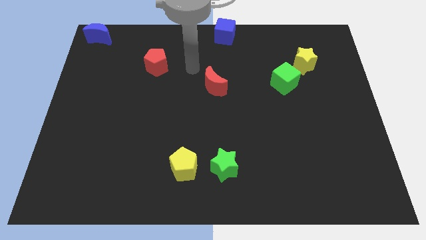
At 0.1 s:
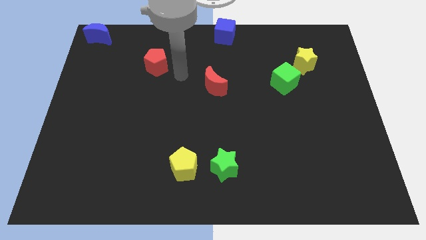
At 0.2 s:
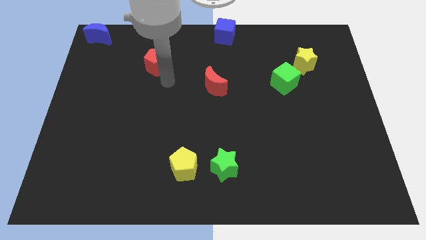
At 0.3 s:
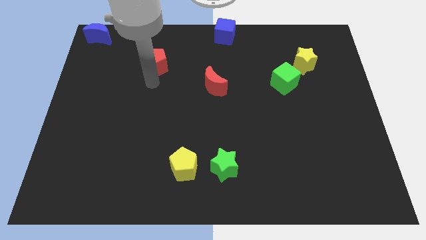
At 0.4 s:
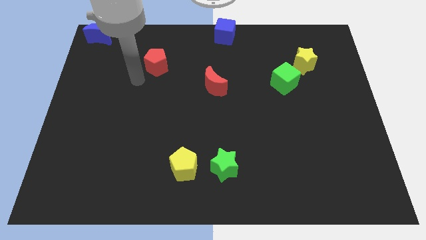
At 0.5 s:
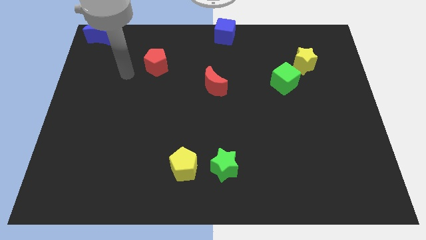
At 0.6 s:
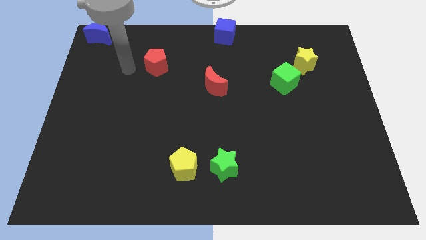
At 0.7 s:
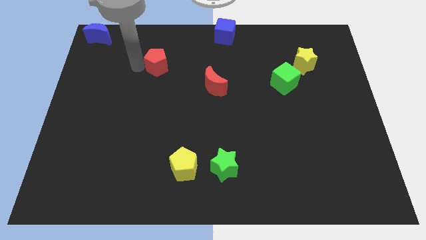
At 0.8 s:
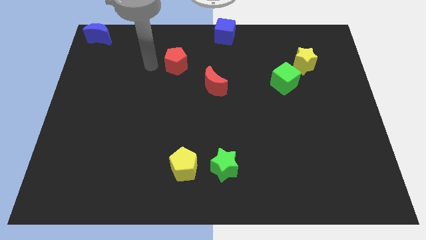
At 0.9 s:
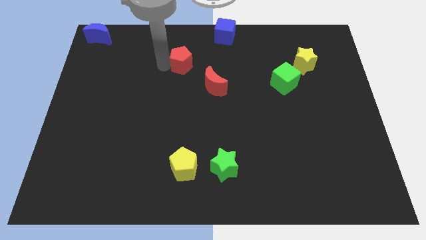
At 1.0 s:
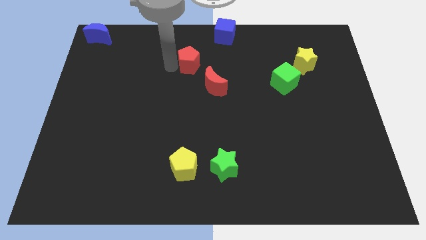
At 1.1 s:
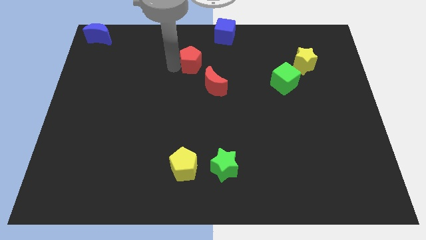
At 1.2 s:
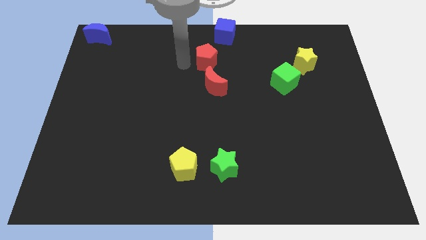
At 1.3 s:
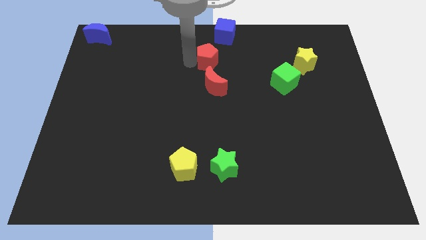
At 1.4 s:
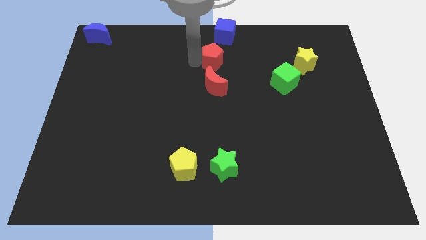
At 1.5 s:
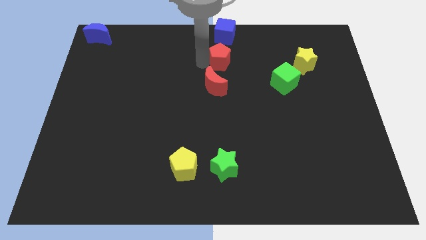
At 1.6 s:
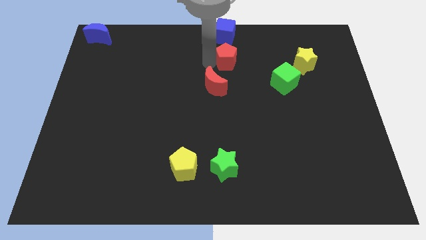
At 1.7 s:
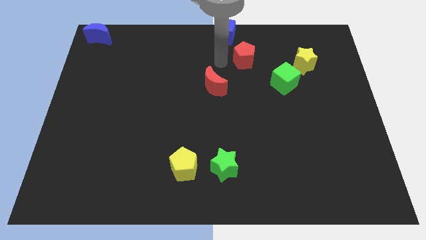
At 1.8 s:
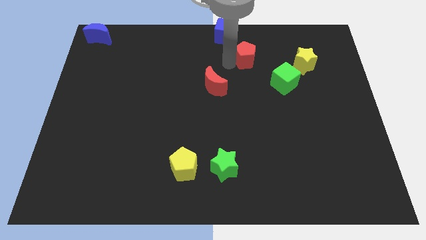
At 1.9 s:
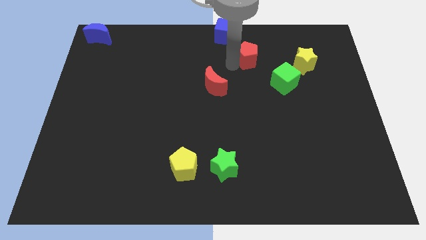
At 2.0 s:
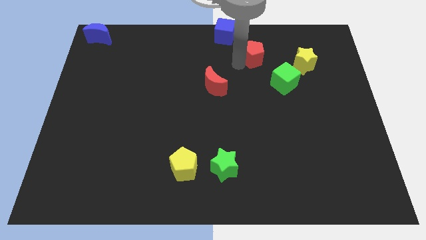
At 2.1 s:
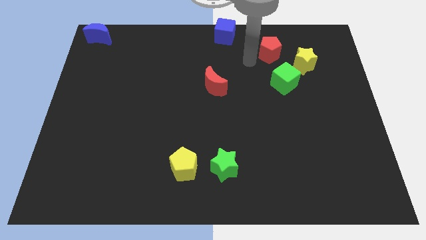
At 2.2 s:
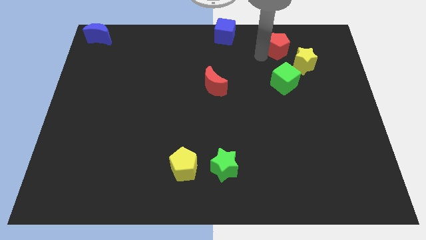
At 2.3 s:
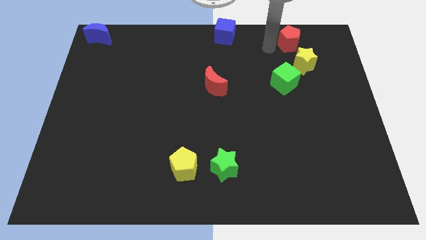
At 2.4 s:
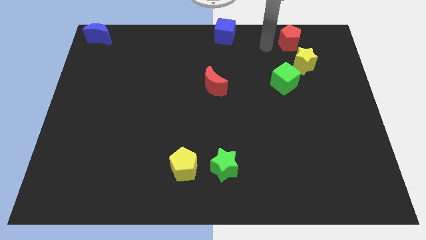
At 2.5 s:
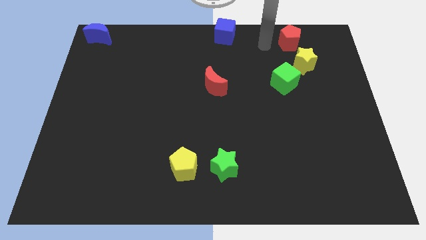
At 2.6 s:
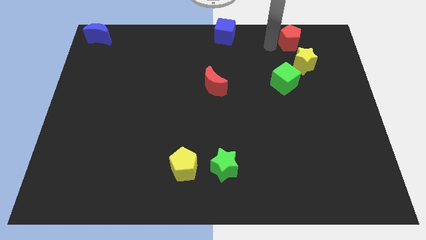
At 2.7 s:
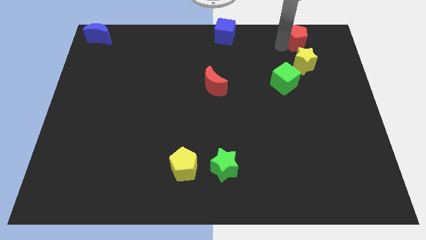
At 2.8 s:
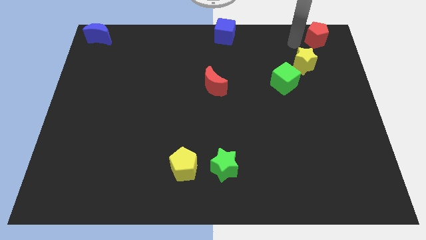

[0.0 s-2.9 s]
place the red pentagon above the yellow star

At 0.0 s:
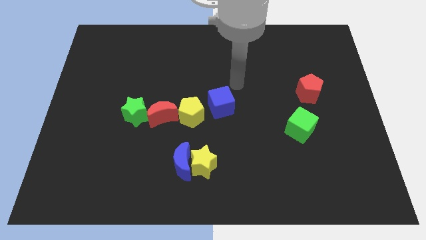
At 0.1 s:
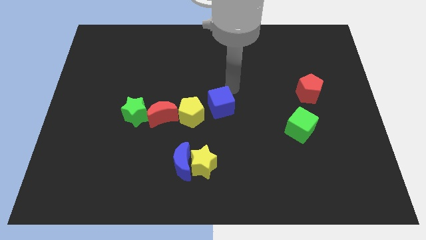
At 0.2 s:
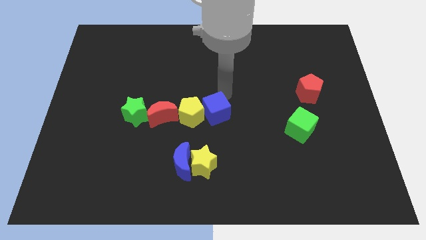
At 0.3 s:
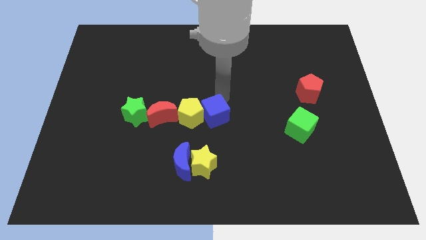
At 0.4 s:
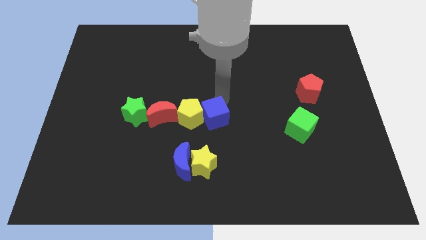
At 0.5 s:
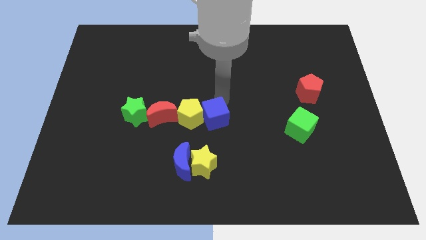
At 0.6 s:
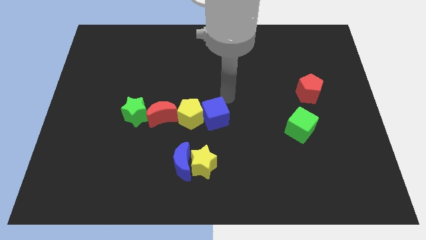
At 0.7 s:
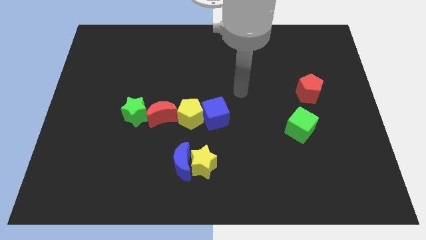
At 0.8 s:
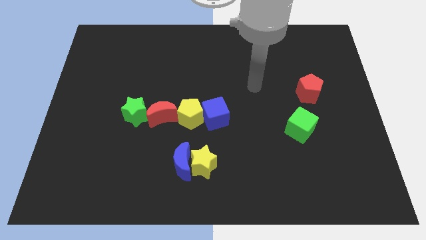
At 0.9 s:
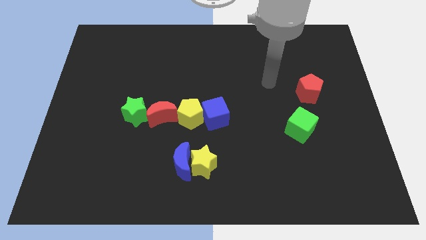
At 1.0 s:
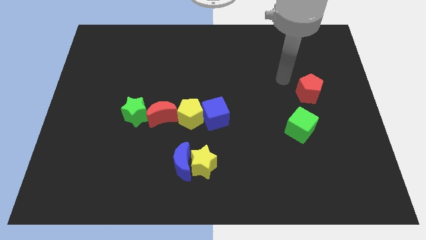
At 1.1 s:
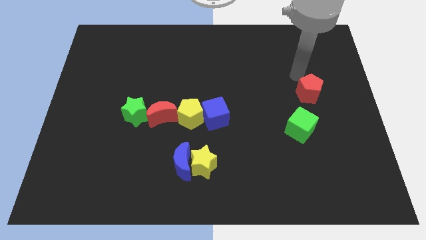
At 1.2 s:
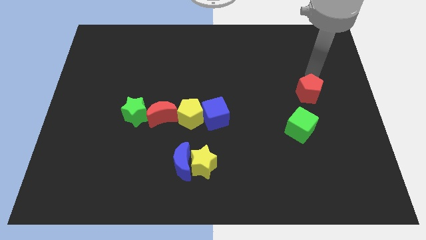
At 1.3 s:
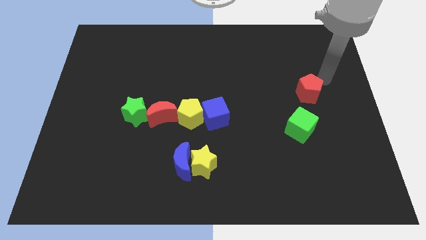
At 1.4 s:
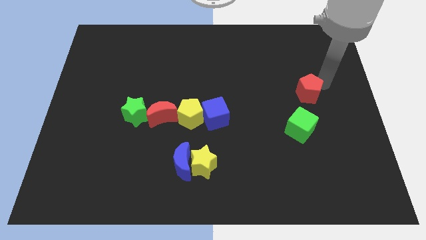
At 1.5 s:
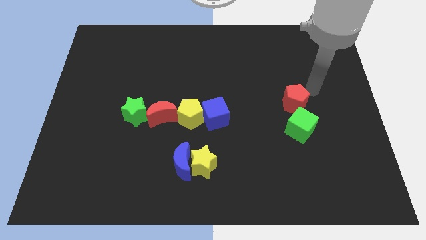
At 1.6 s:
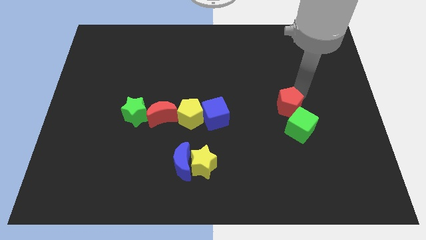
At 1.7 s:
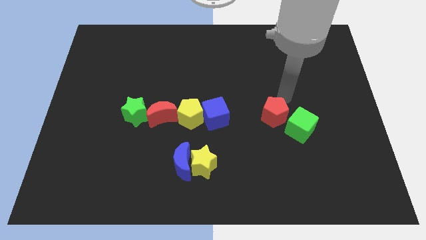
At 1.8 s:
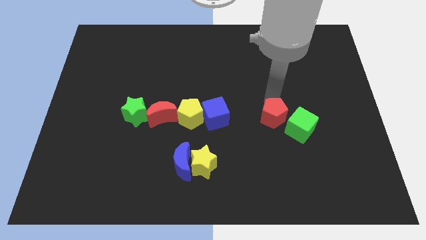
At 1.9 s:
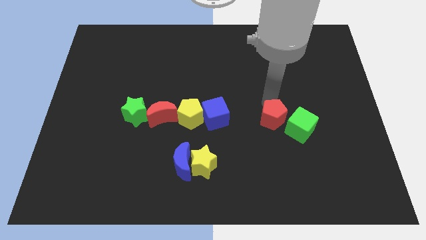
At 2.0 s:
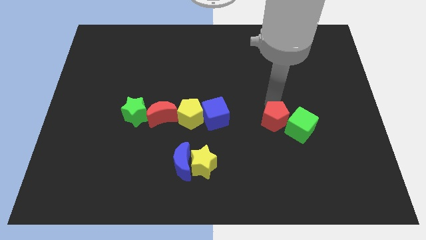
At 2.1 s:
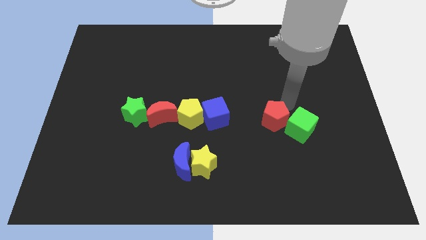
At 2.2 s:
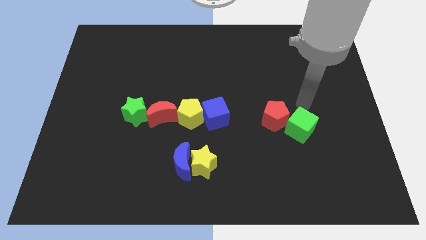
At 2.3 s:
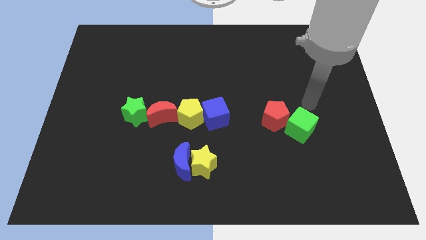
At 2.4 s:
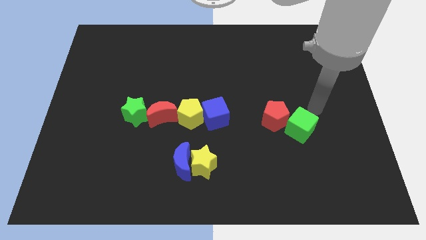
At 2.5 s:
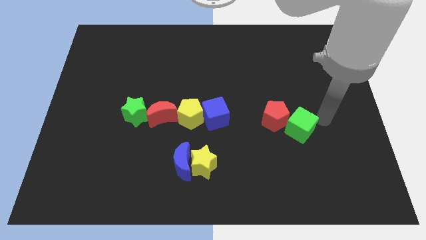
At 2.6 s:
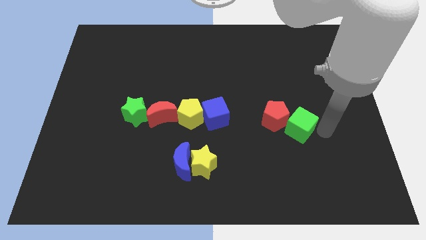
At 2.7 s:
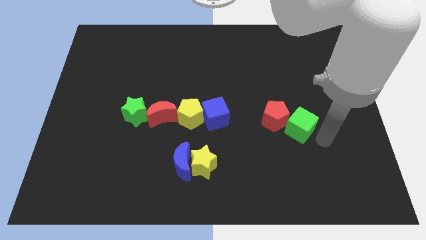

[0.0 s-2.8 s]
move red pentagon beside green cube

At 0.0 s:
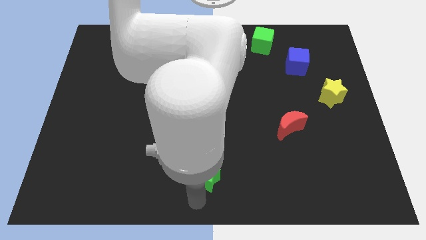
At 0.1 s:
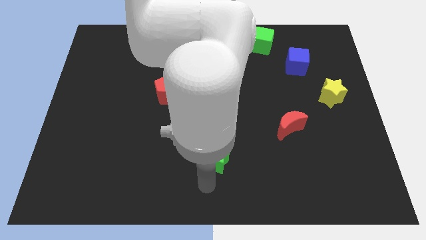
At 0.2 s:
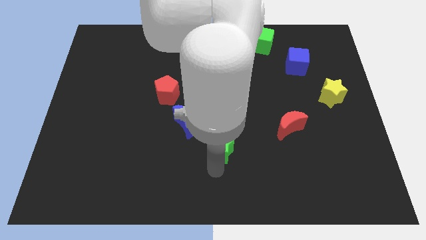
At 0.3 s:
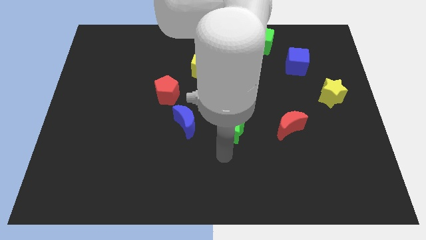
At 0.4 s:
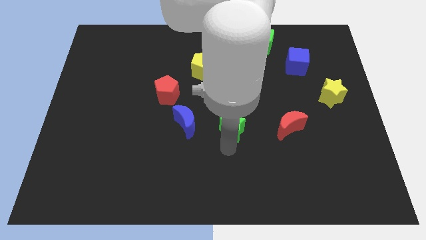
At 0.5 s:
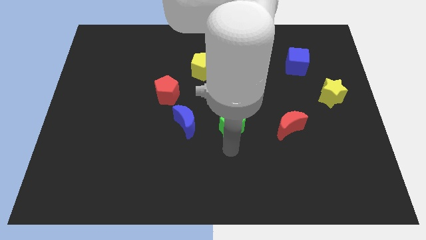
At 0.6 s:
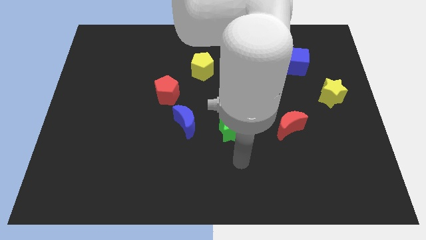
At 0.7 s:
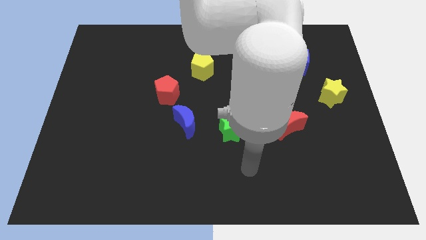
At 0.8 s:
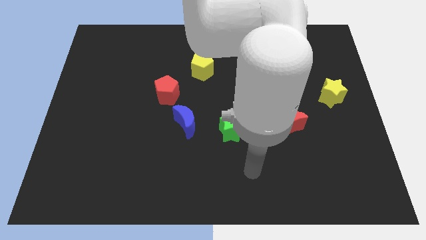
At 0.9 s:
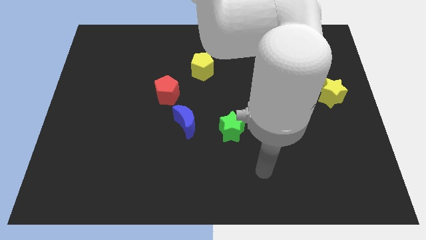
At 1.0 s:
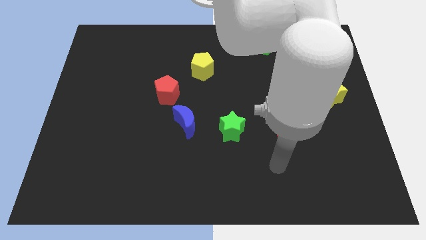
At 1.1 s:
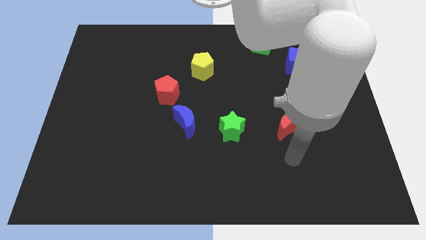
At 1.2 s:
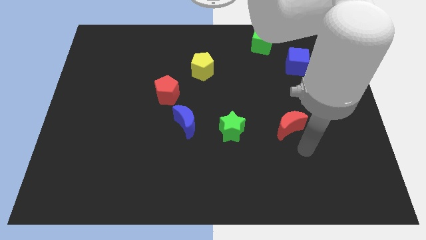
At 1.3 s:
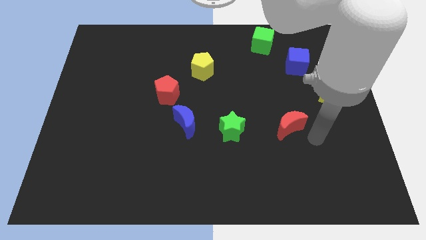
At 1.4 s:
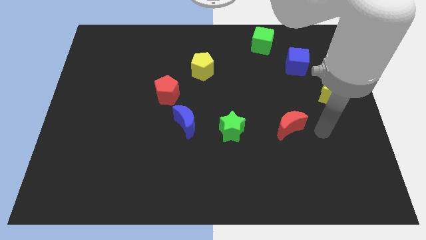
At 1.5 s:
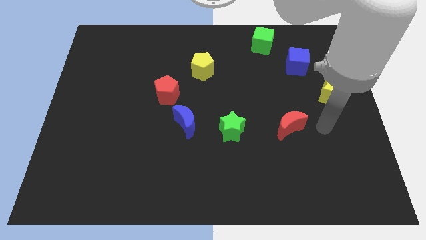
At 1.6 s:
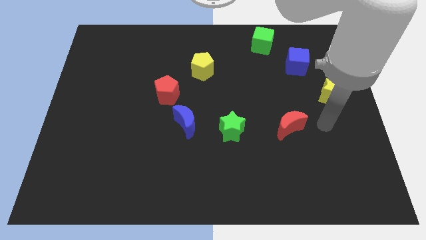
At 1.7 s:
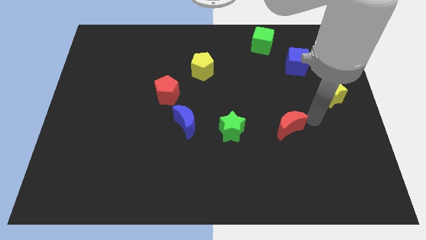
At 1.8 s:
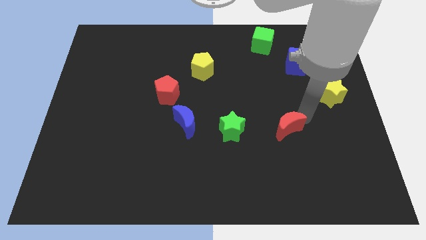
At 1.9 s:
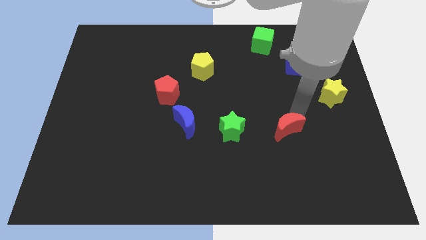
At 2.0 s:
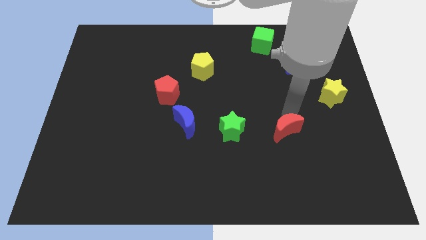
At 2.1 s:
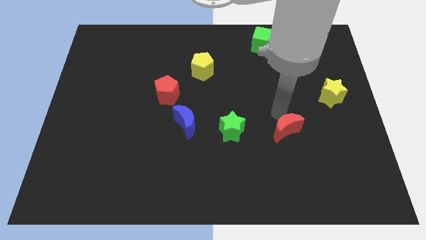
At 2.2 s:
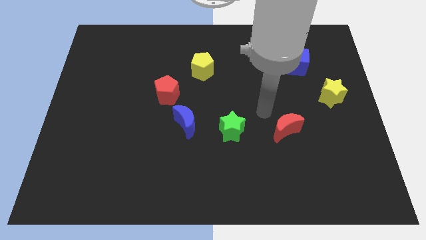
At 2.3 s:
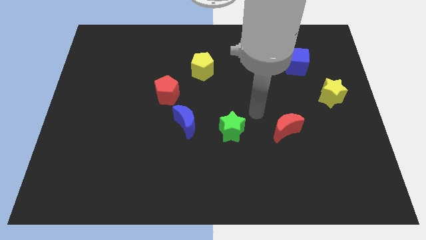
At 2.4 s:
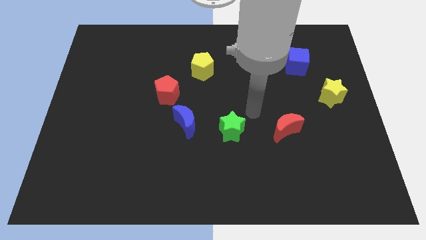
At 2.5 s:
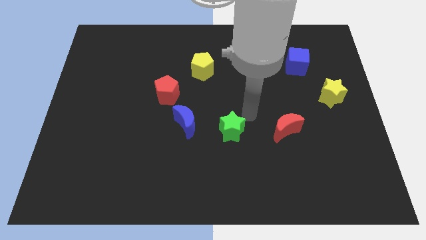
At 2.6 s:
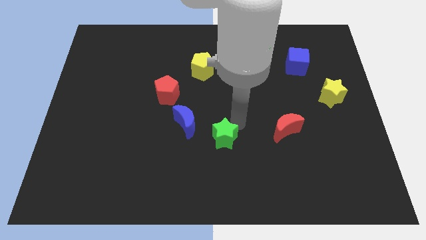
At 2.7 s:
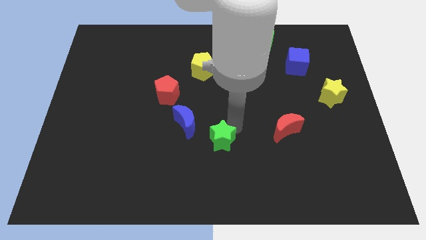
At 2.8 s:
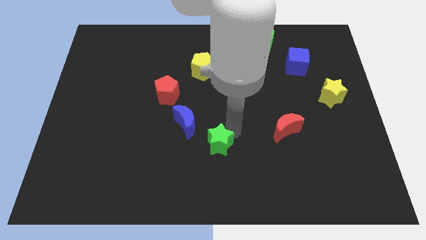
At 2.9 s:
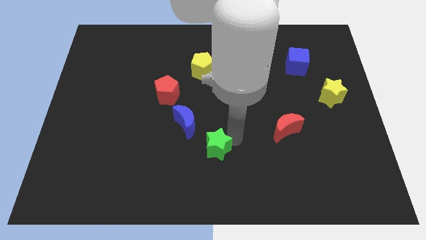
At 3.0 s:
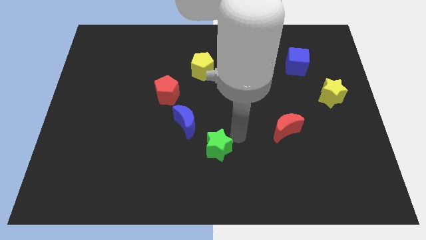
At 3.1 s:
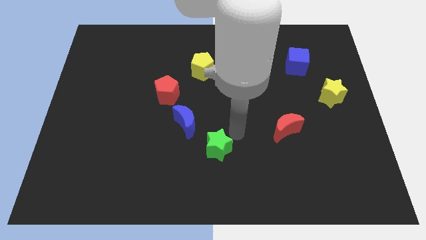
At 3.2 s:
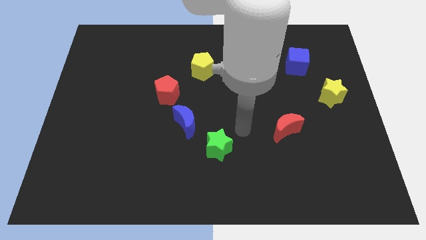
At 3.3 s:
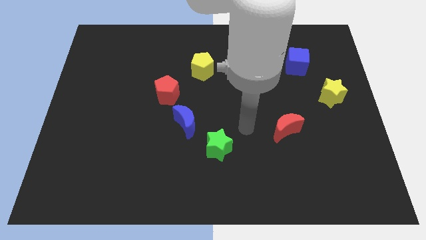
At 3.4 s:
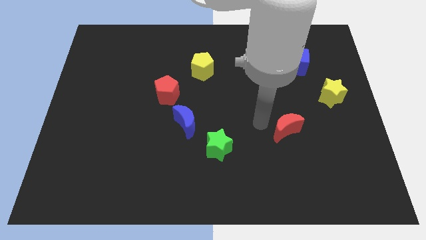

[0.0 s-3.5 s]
push the green star slightly towards the bottom of the board
